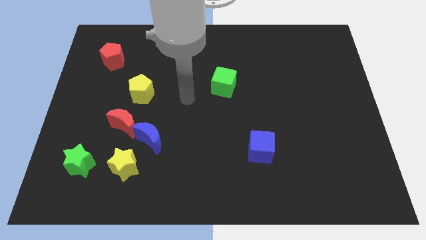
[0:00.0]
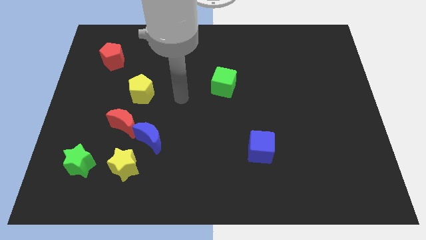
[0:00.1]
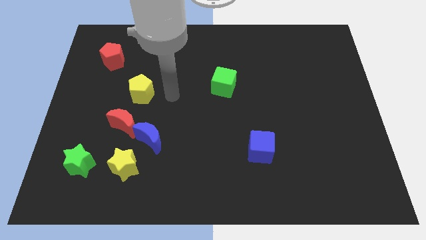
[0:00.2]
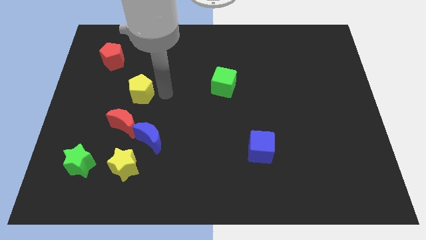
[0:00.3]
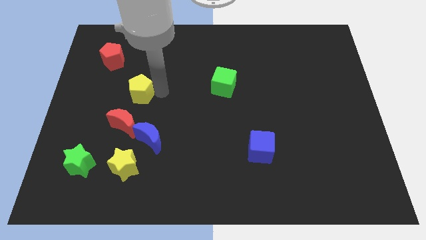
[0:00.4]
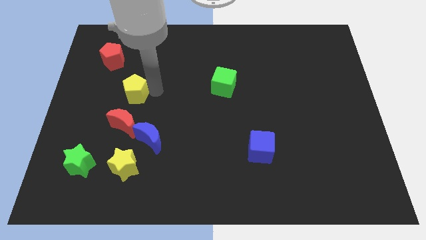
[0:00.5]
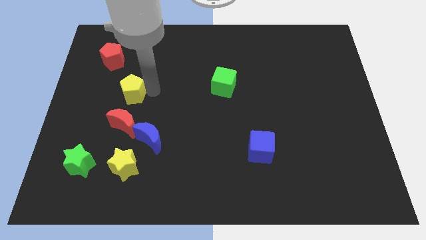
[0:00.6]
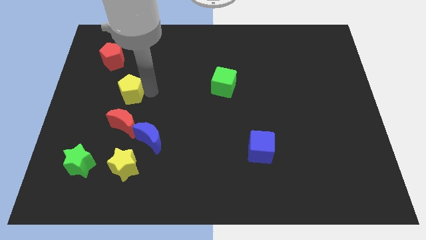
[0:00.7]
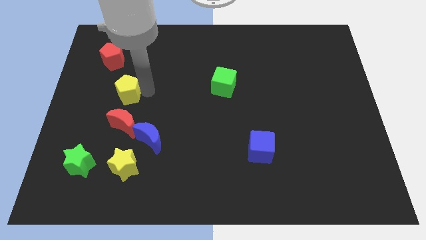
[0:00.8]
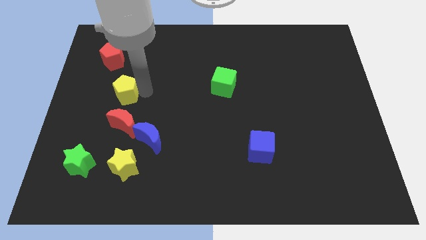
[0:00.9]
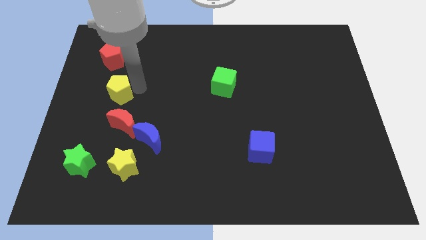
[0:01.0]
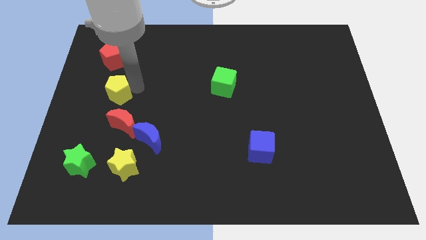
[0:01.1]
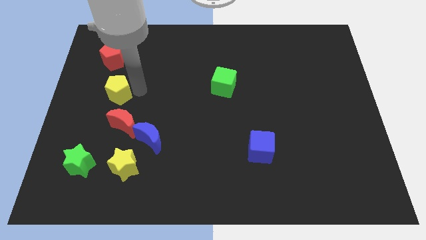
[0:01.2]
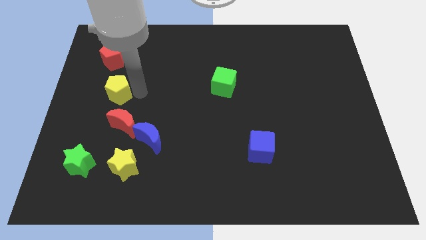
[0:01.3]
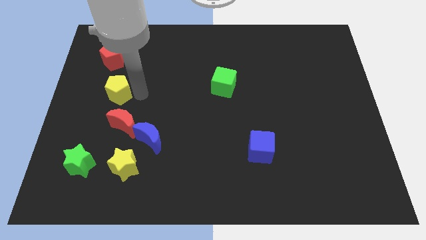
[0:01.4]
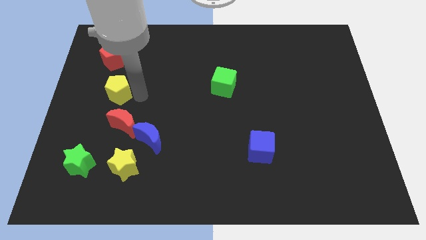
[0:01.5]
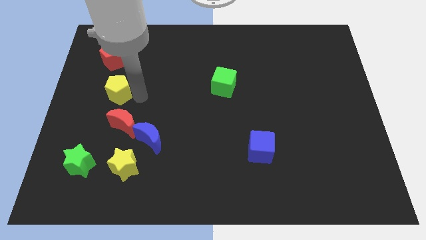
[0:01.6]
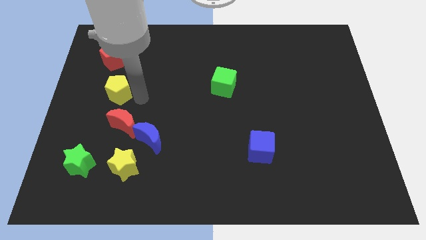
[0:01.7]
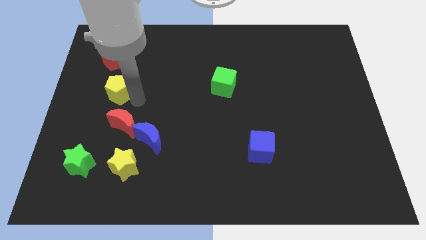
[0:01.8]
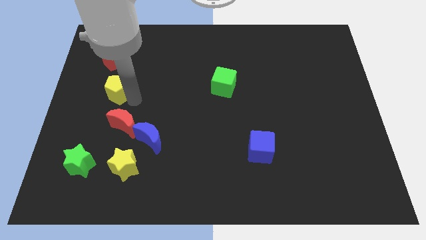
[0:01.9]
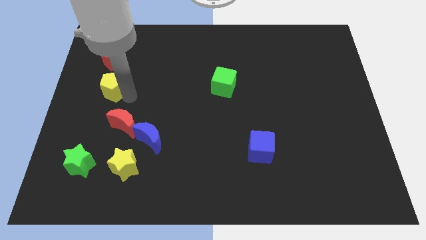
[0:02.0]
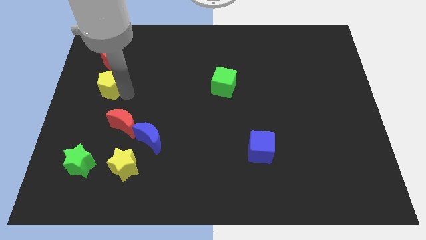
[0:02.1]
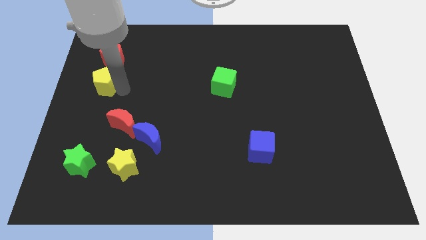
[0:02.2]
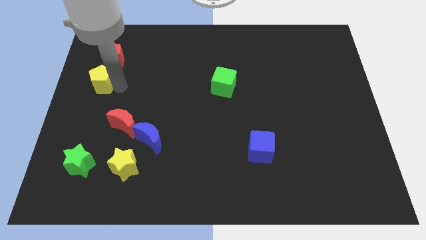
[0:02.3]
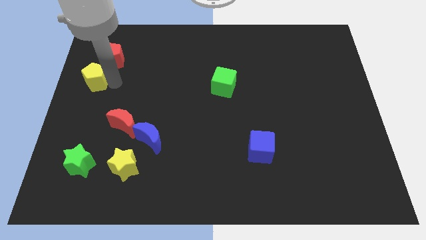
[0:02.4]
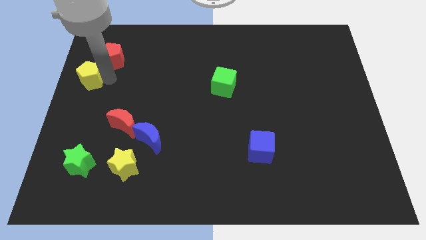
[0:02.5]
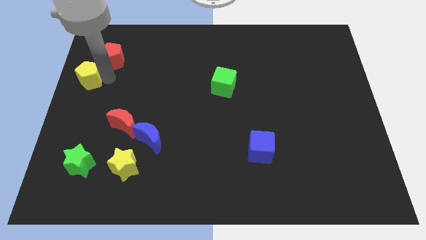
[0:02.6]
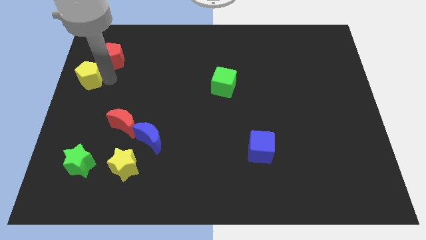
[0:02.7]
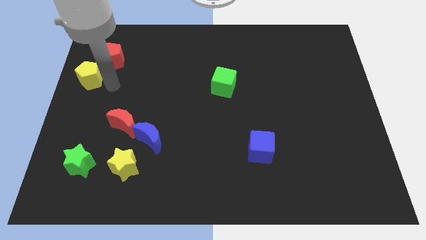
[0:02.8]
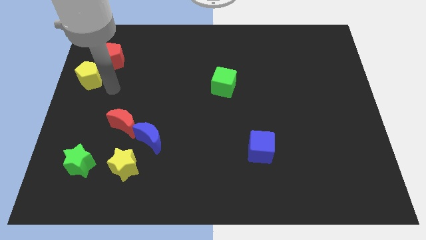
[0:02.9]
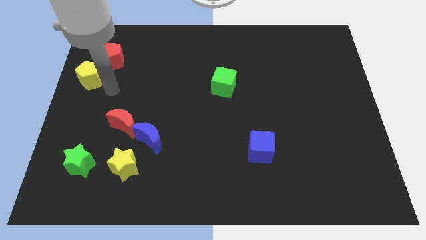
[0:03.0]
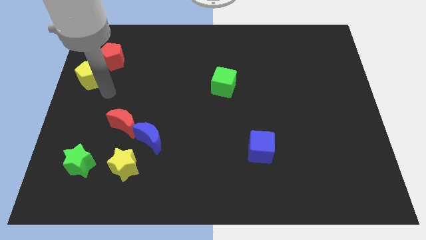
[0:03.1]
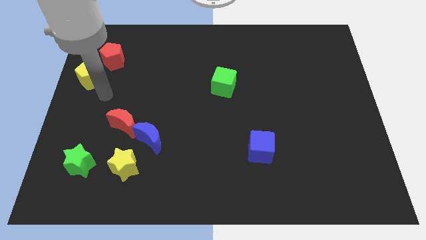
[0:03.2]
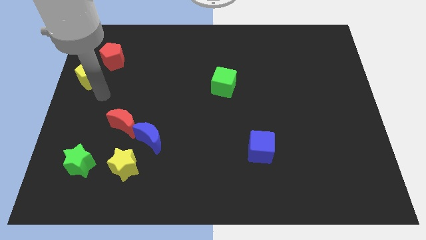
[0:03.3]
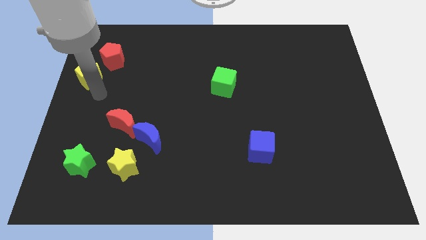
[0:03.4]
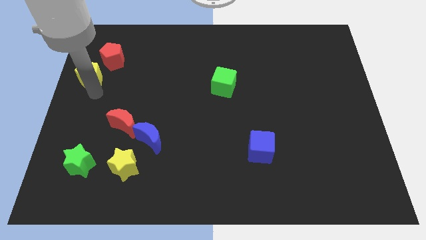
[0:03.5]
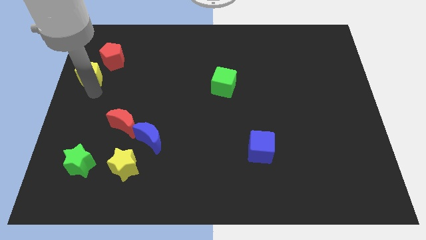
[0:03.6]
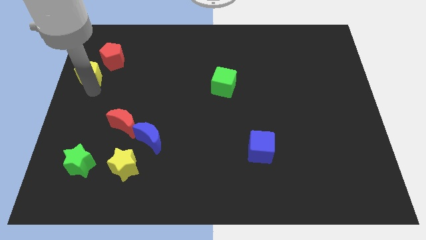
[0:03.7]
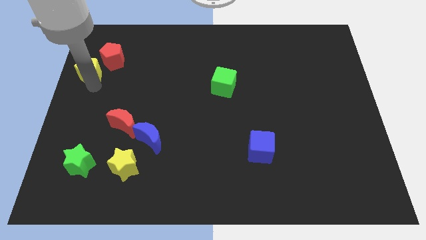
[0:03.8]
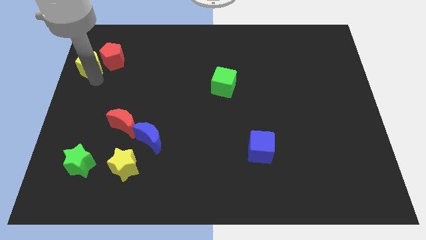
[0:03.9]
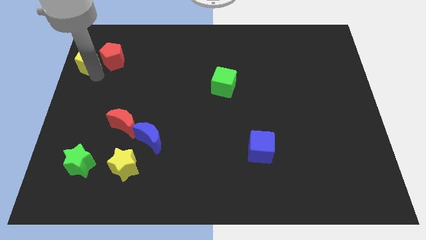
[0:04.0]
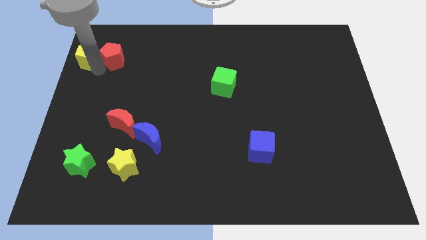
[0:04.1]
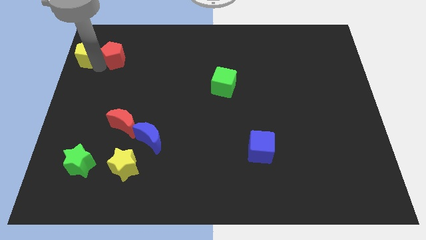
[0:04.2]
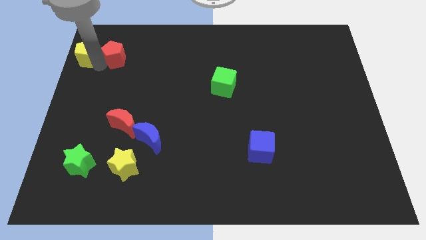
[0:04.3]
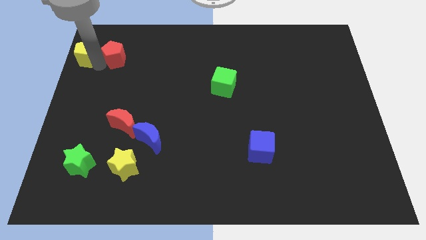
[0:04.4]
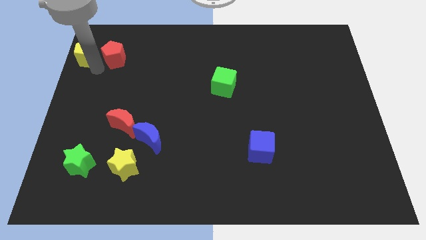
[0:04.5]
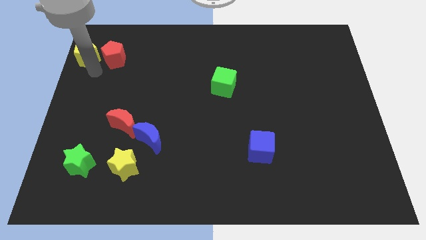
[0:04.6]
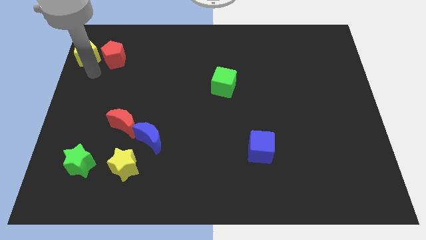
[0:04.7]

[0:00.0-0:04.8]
place the yellow pentagon to the left side of the red pentagon

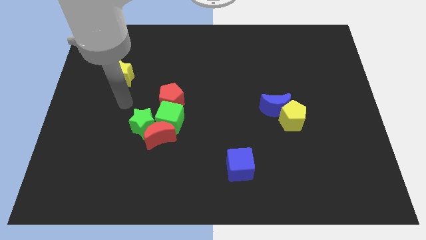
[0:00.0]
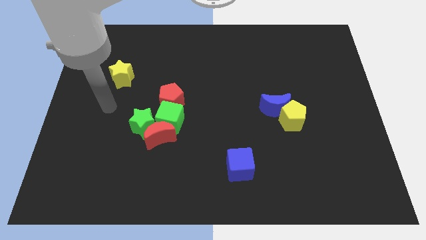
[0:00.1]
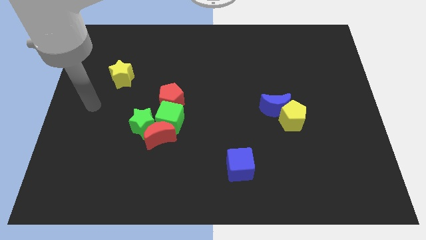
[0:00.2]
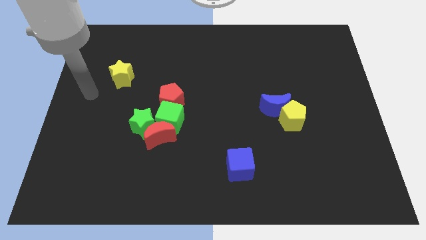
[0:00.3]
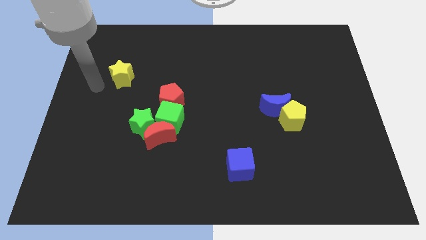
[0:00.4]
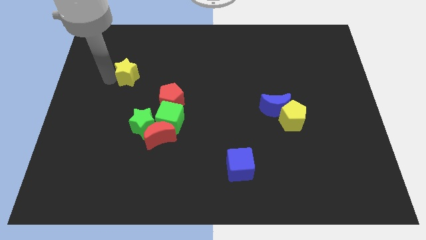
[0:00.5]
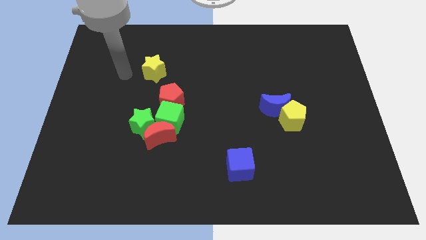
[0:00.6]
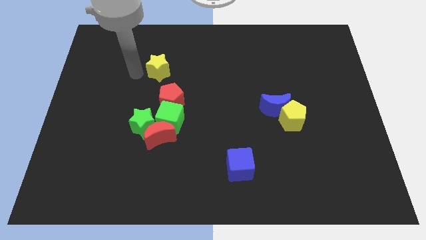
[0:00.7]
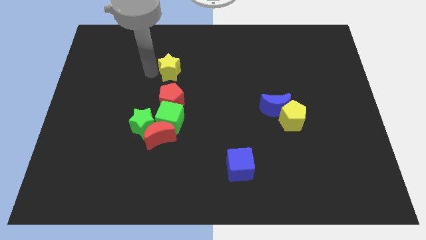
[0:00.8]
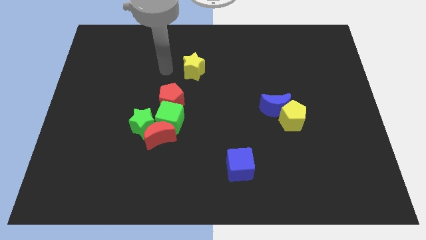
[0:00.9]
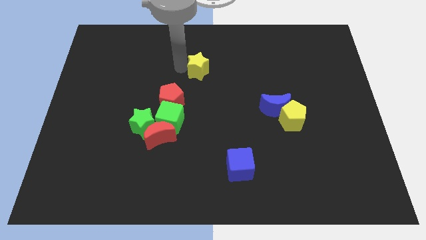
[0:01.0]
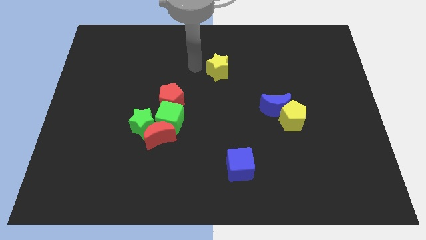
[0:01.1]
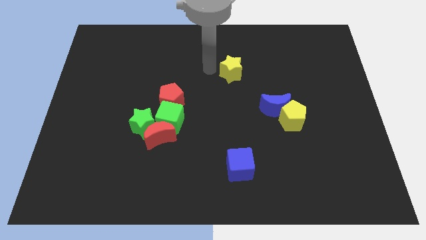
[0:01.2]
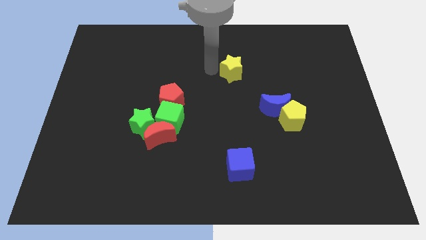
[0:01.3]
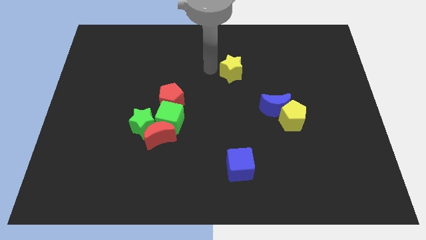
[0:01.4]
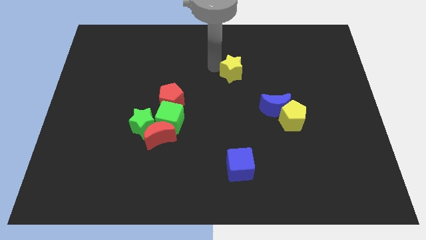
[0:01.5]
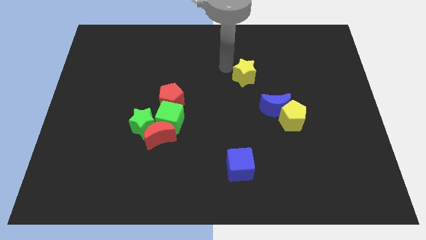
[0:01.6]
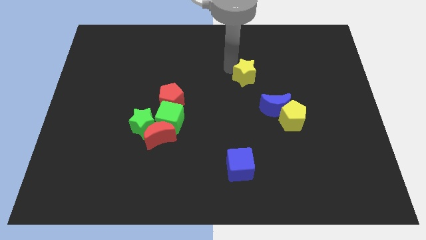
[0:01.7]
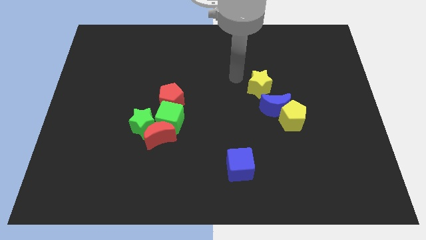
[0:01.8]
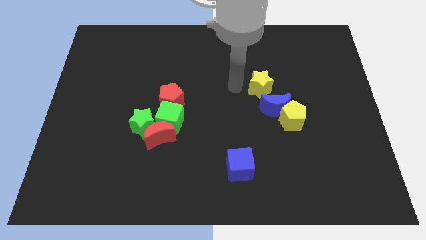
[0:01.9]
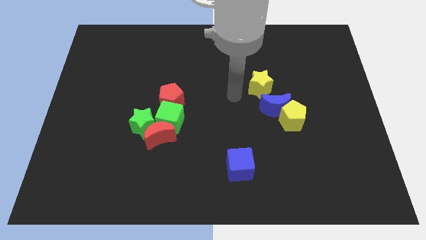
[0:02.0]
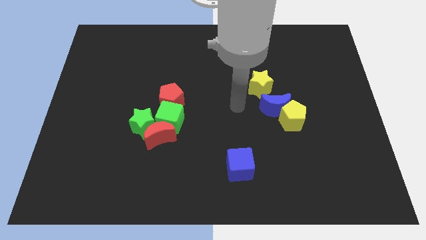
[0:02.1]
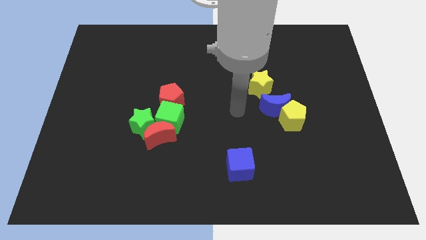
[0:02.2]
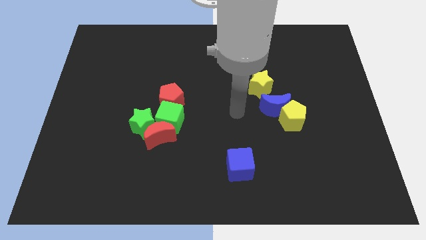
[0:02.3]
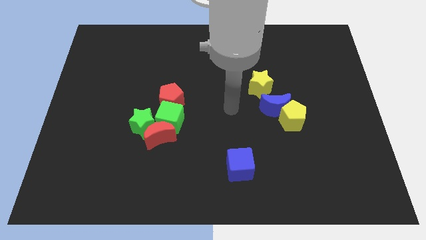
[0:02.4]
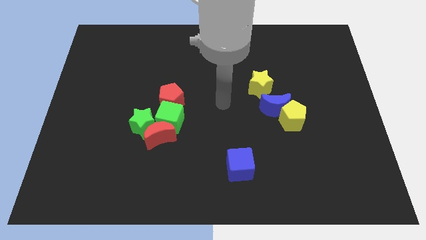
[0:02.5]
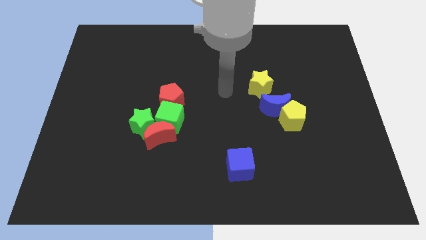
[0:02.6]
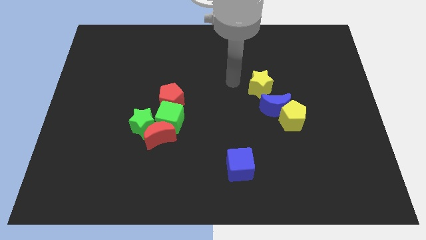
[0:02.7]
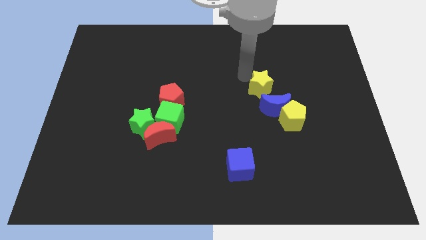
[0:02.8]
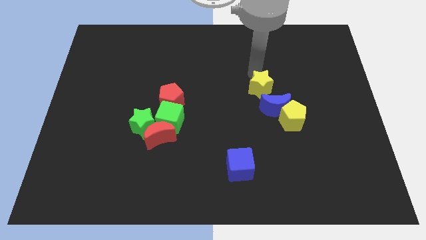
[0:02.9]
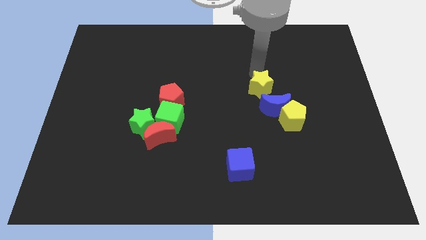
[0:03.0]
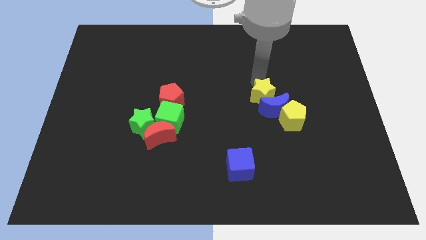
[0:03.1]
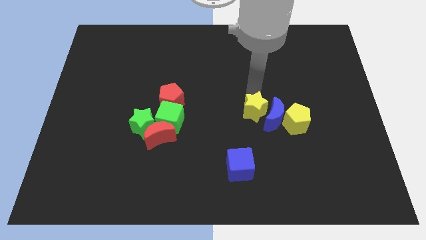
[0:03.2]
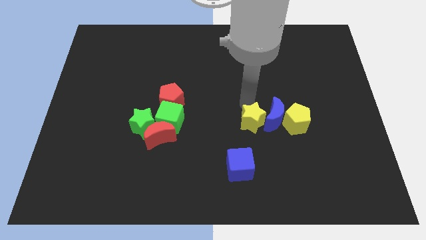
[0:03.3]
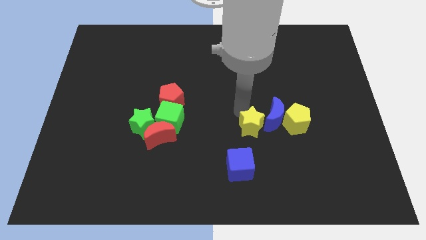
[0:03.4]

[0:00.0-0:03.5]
move the yellow star to the left of the blue crescent

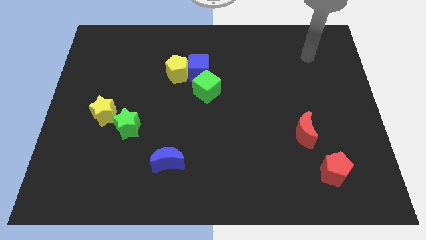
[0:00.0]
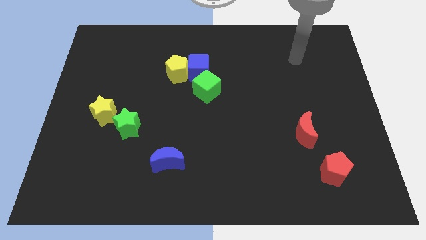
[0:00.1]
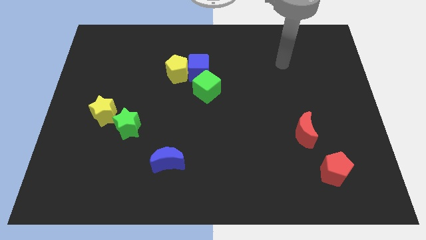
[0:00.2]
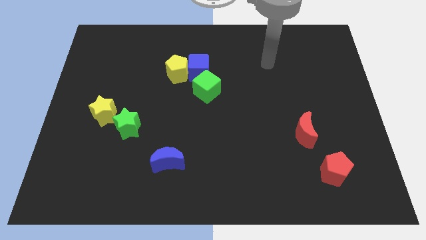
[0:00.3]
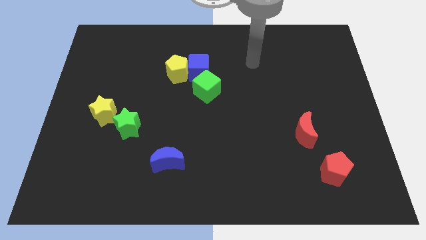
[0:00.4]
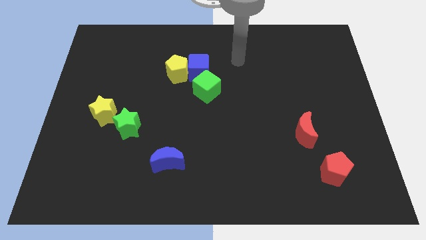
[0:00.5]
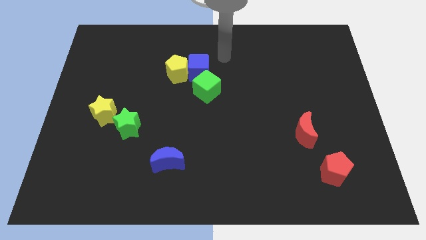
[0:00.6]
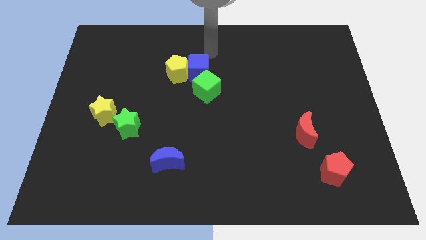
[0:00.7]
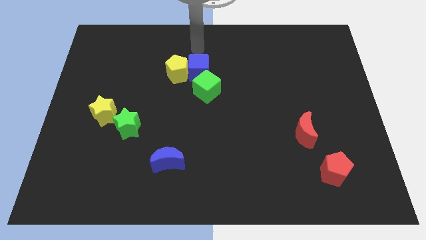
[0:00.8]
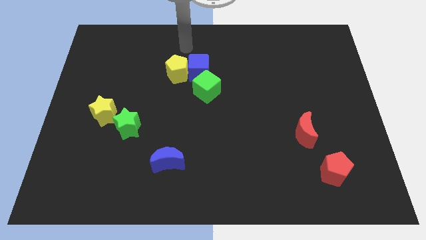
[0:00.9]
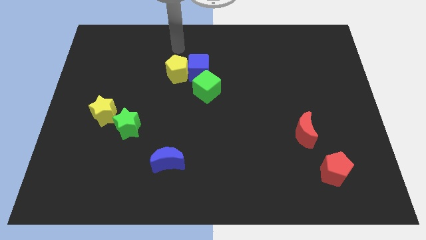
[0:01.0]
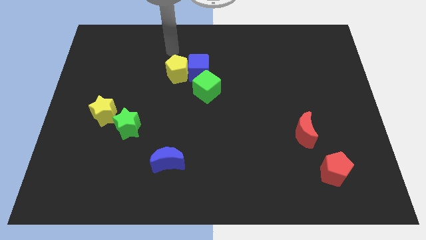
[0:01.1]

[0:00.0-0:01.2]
place your arm above the yellow pentagon
